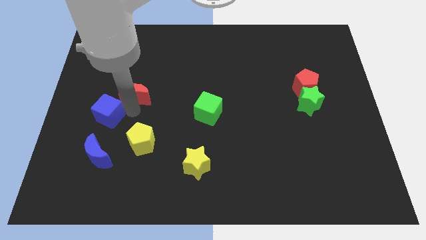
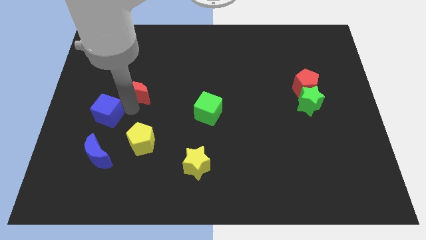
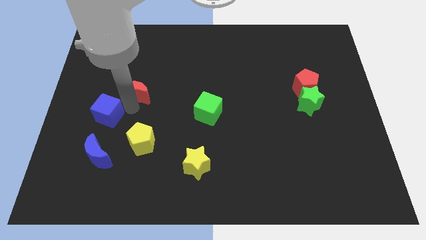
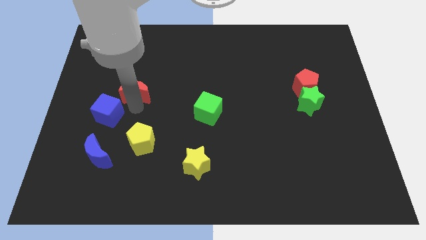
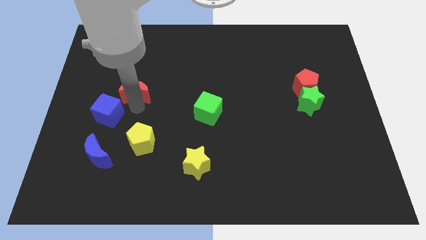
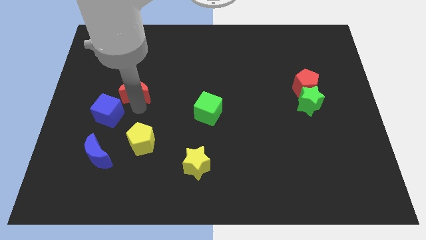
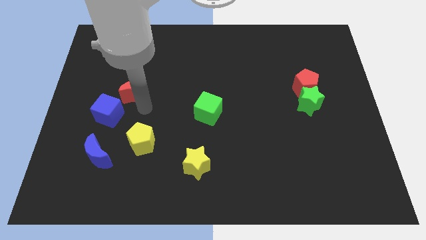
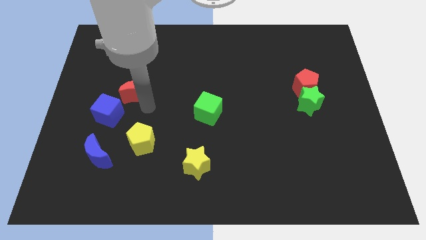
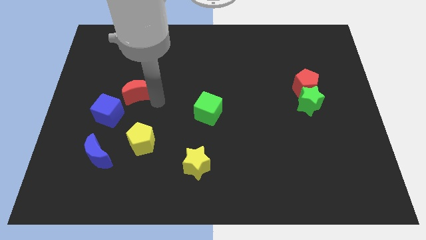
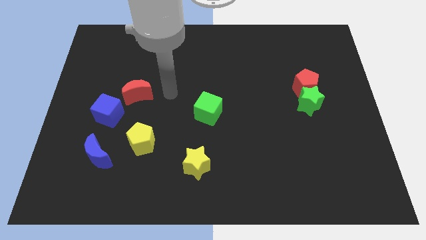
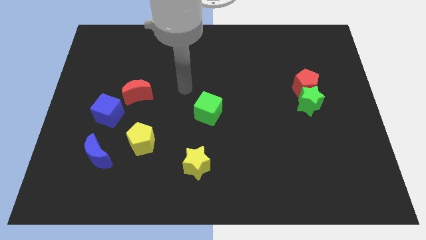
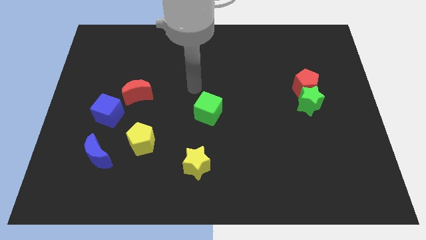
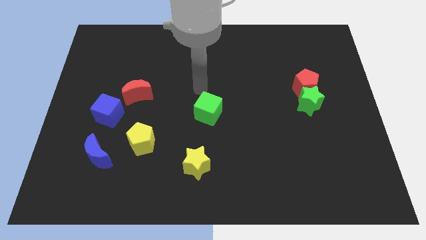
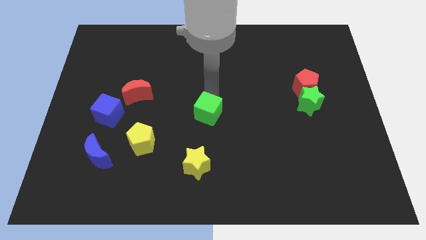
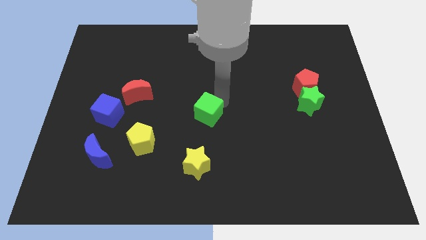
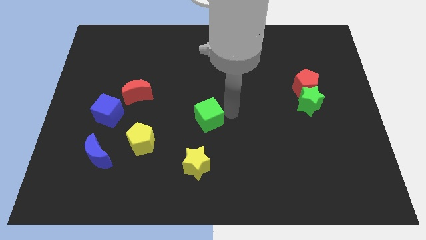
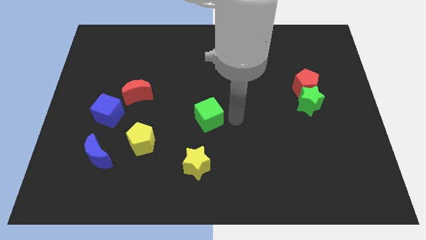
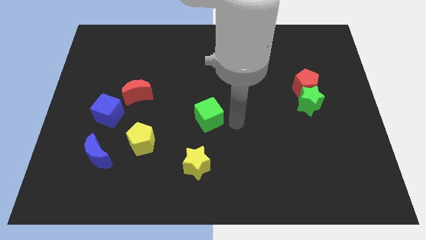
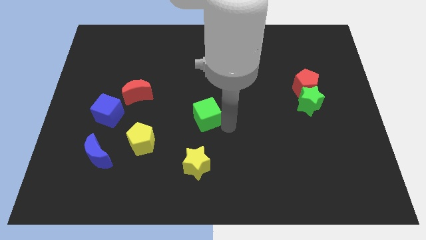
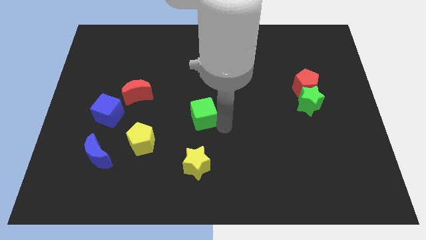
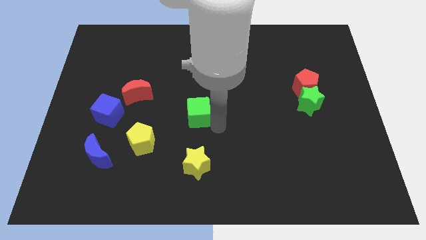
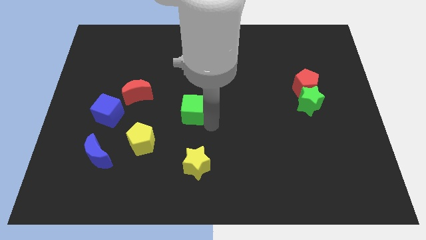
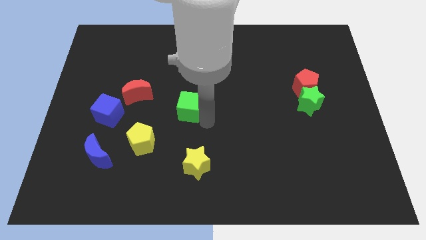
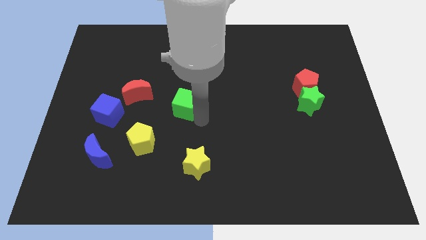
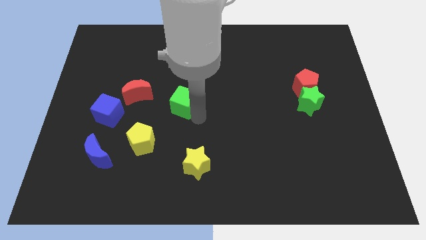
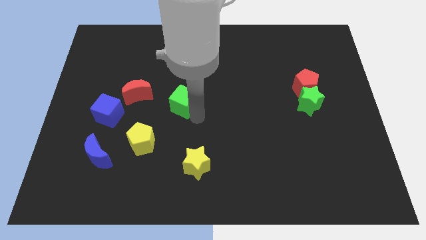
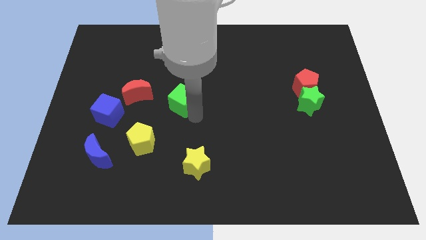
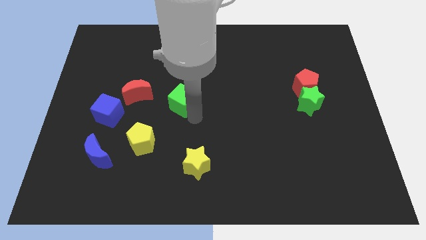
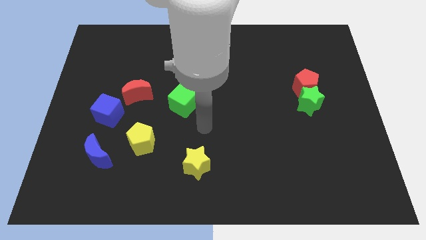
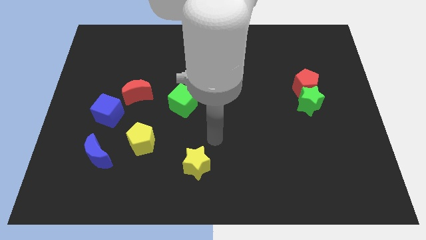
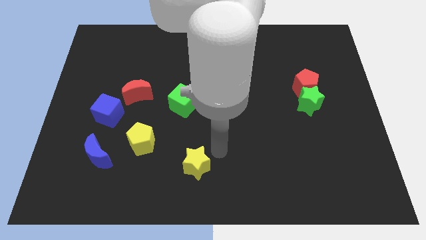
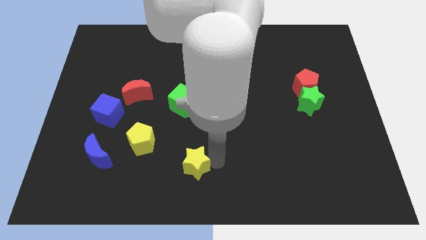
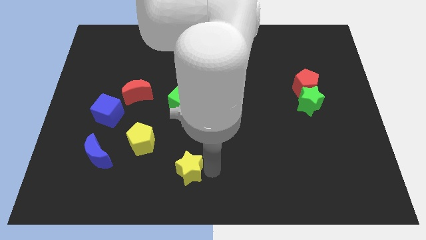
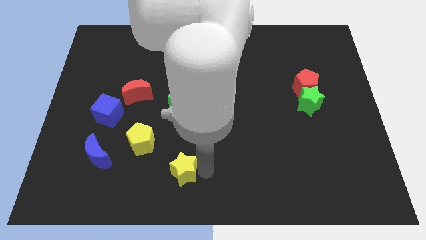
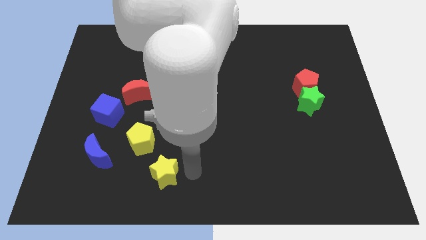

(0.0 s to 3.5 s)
push the green cube slightly to the left

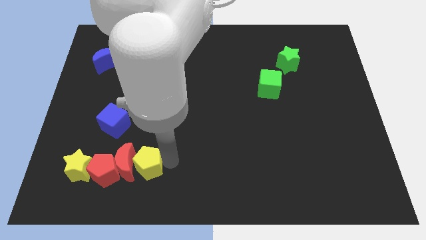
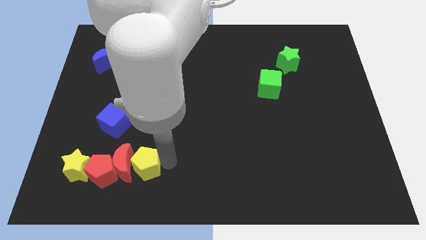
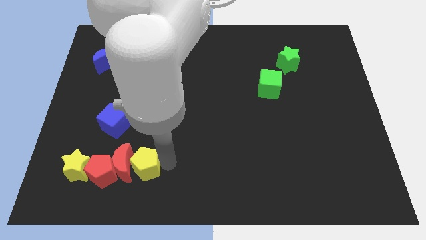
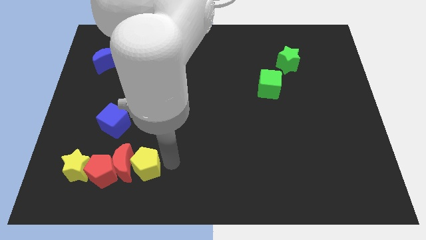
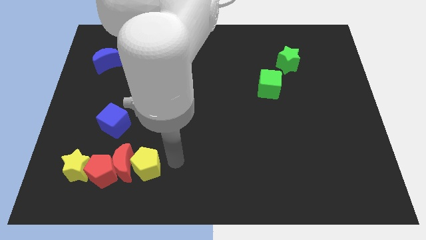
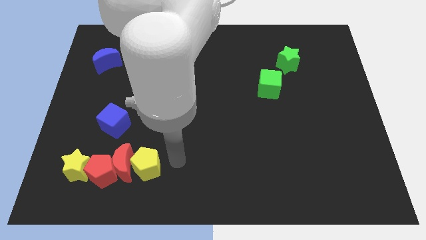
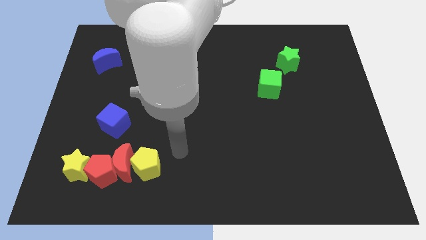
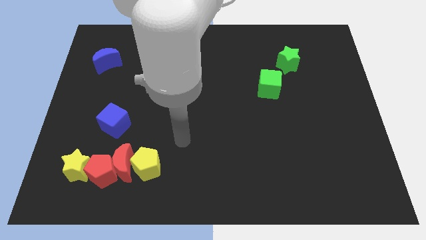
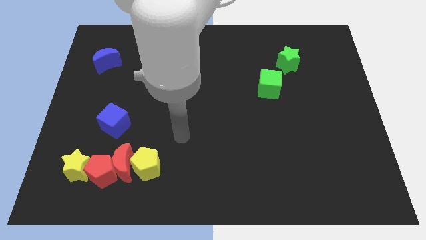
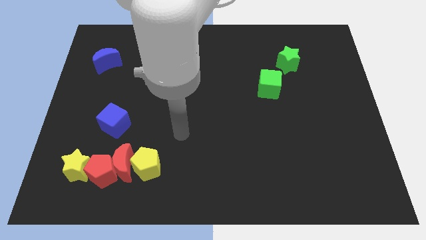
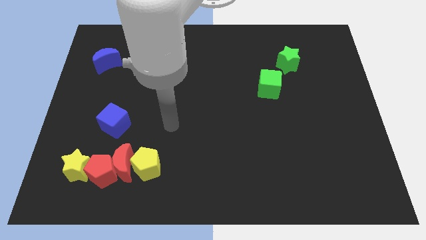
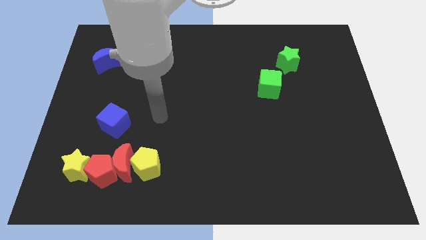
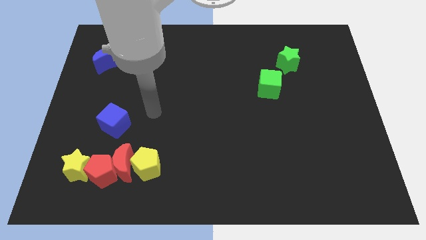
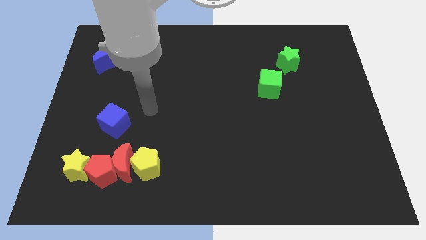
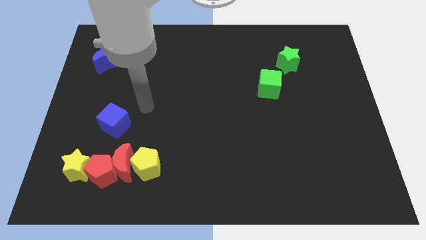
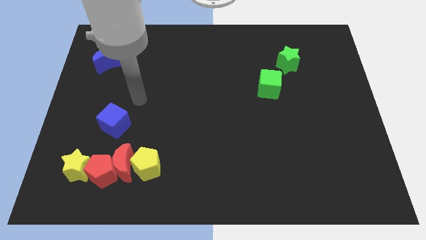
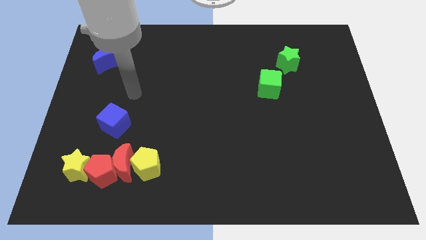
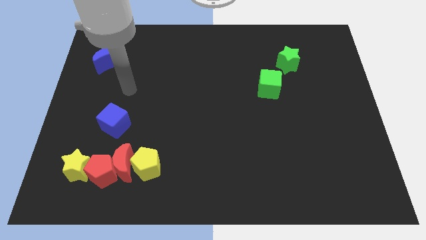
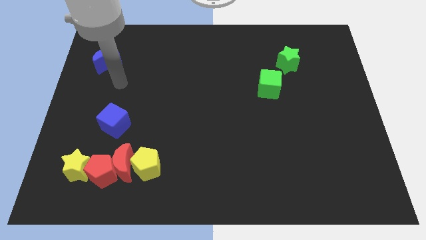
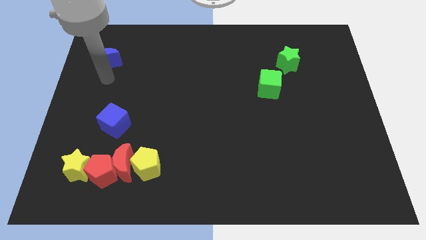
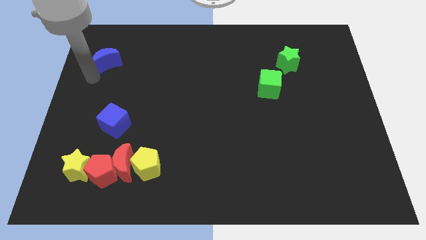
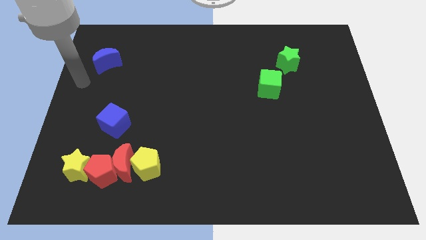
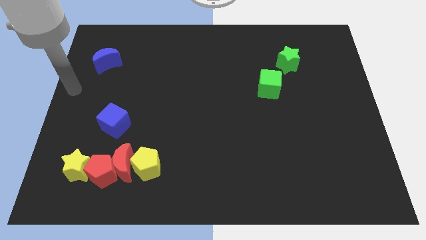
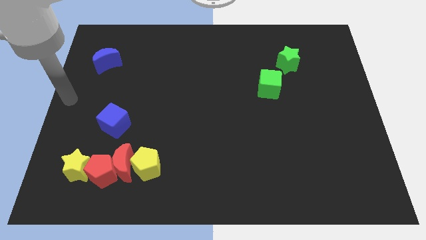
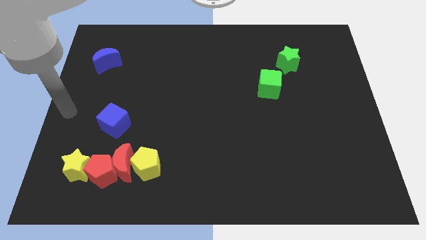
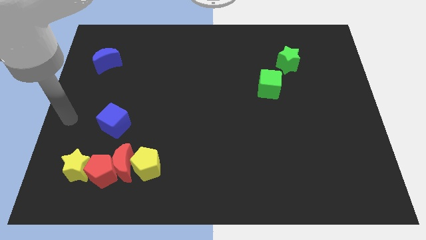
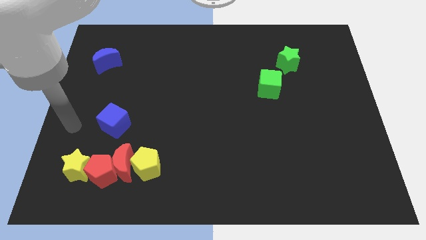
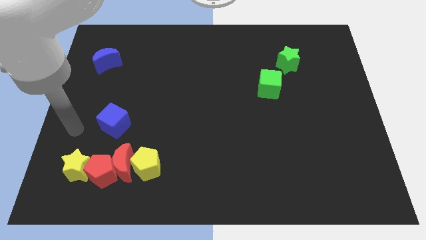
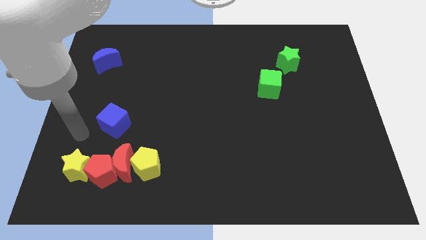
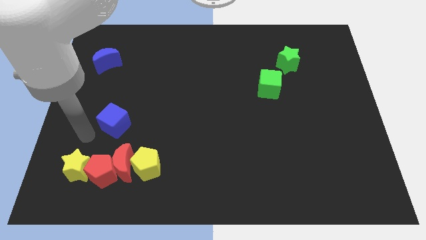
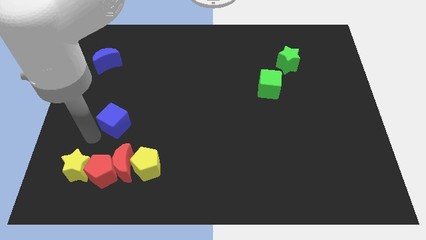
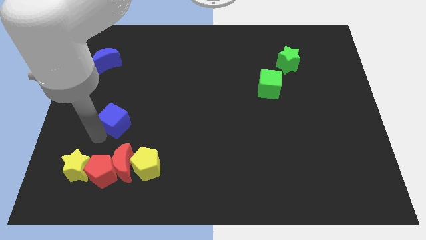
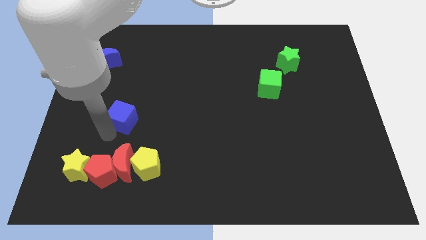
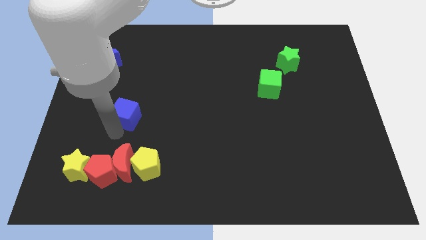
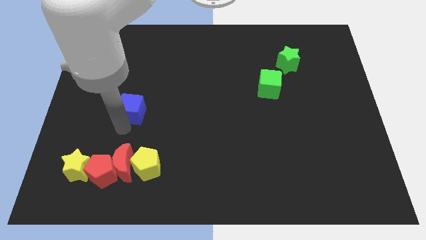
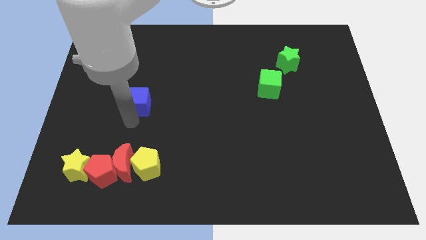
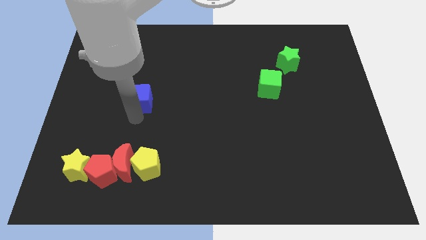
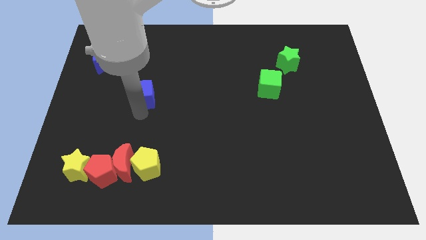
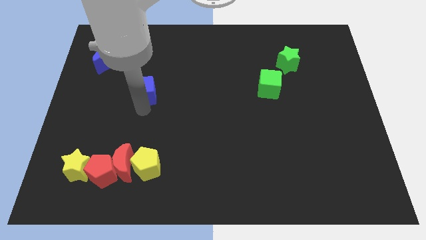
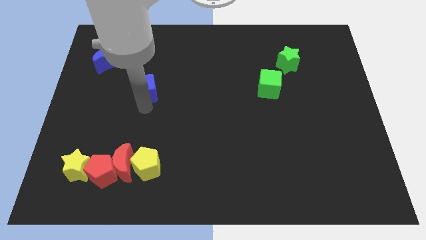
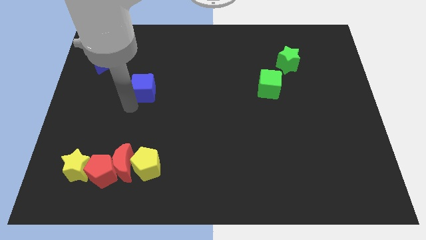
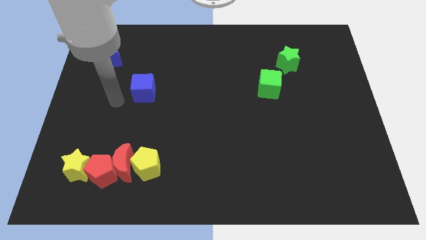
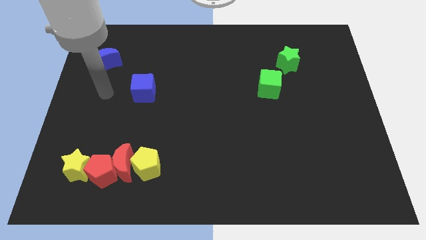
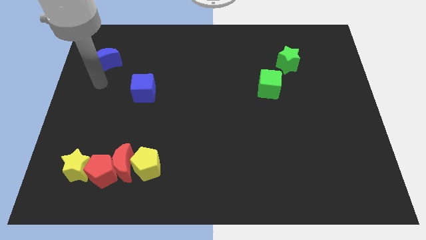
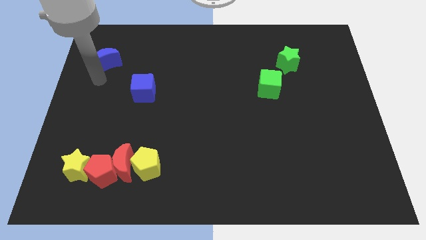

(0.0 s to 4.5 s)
move the blue cube to the top of the red moon

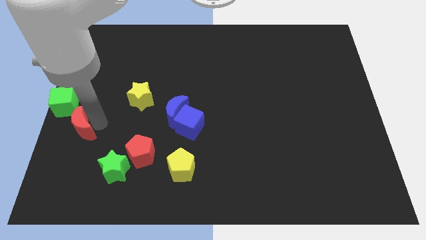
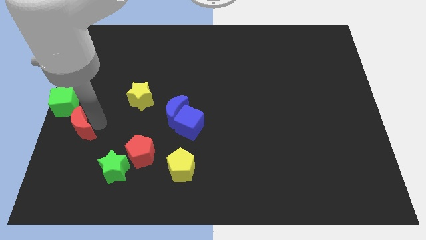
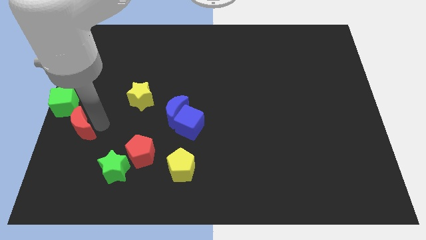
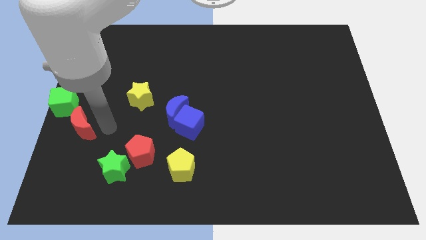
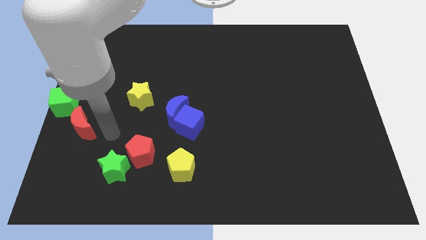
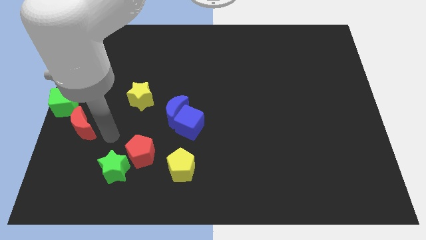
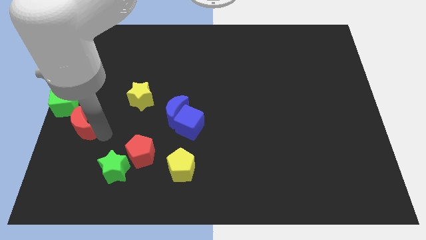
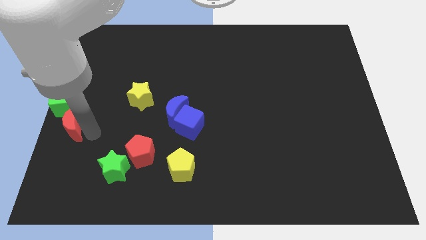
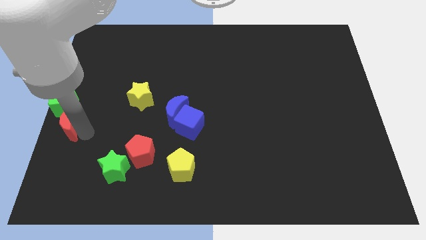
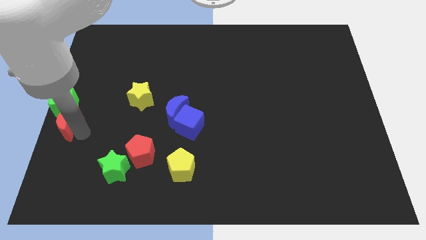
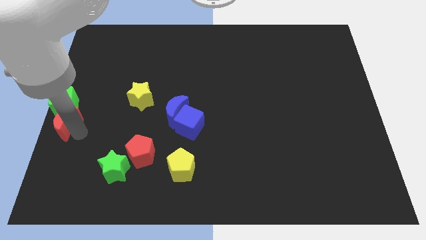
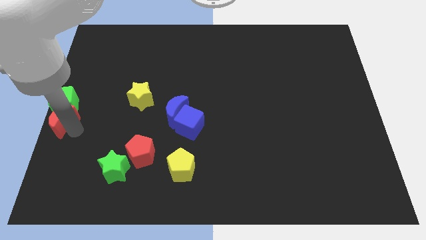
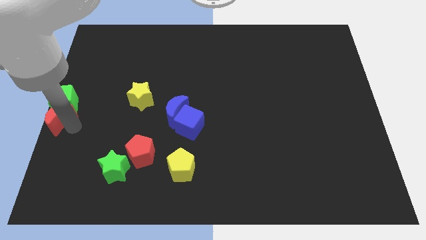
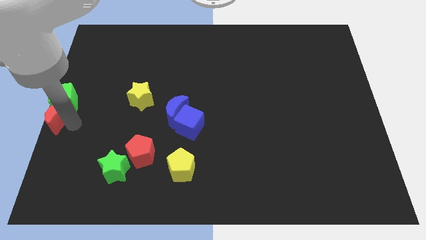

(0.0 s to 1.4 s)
move the red moon below the green cube
